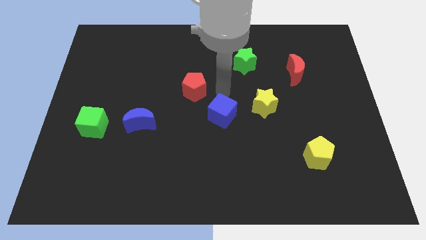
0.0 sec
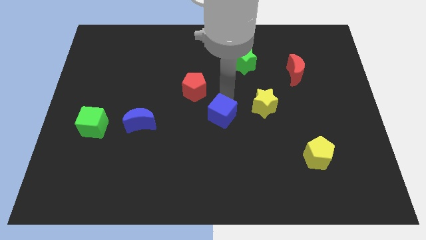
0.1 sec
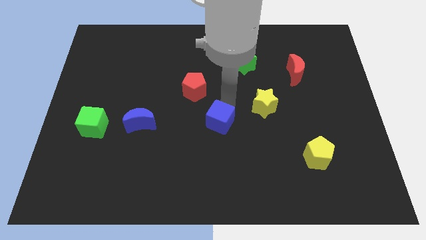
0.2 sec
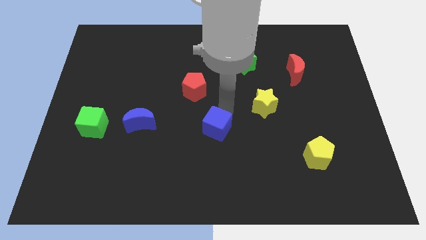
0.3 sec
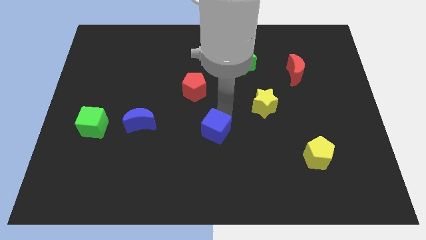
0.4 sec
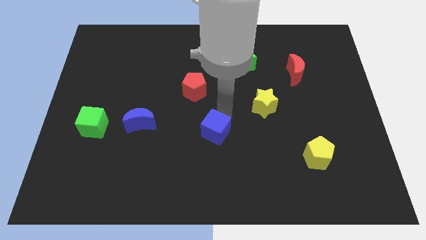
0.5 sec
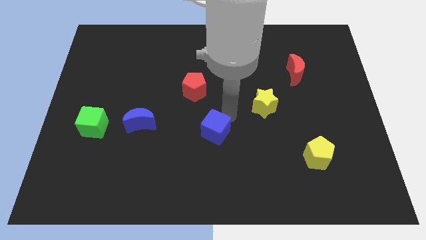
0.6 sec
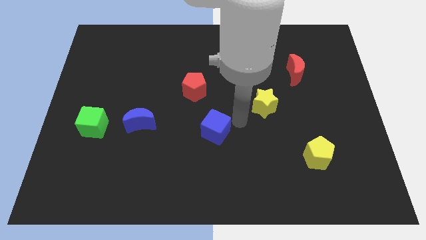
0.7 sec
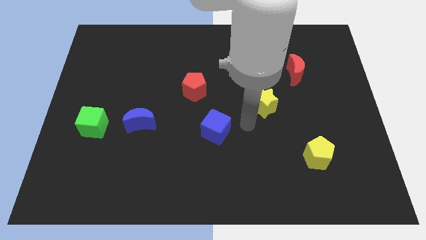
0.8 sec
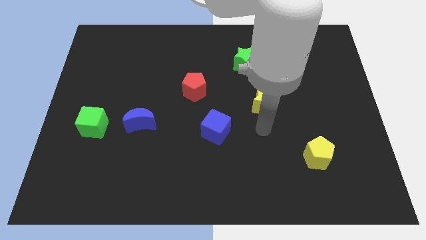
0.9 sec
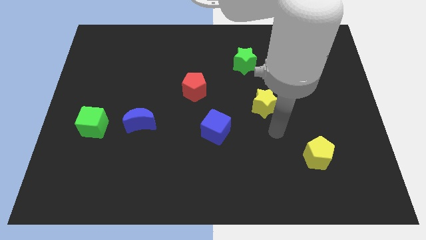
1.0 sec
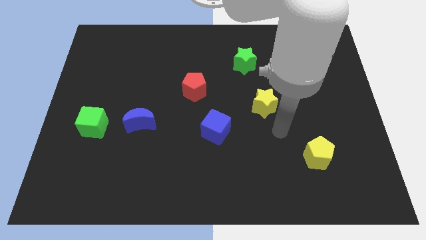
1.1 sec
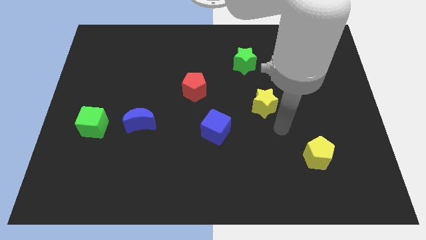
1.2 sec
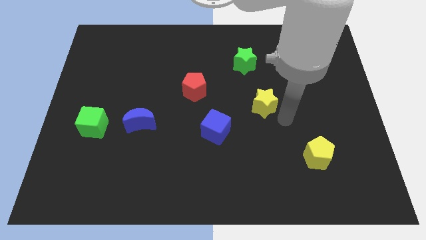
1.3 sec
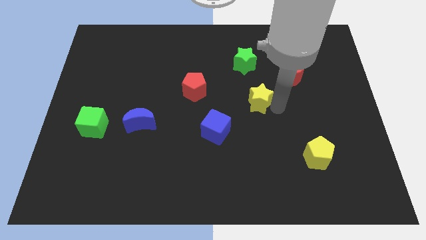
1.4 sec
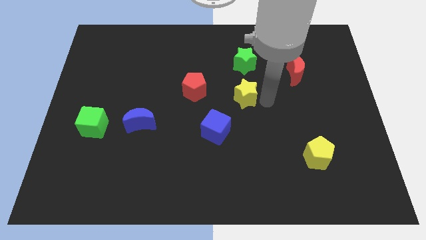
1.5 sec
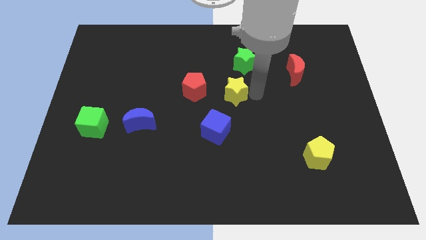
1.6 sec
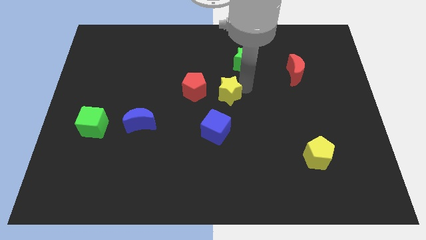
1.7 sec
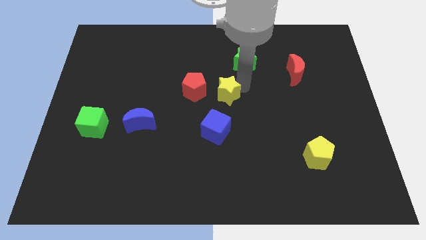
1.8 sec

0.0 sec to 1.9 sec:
push yellow star towards red pentagon

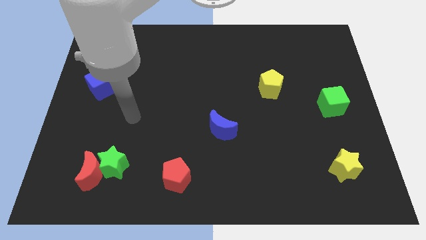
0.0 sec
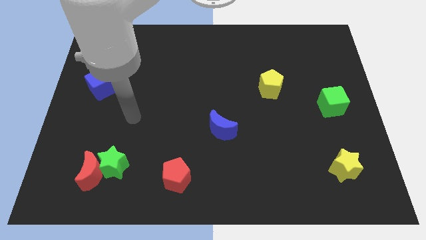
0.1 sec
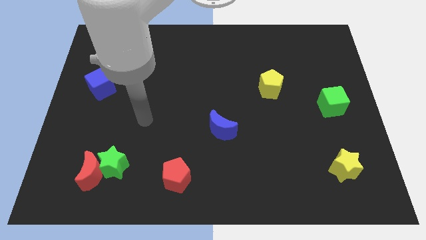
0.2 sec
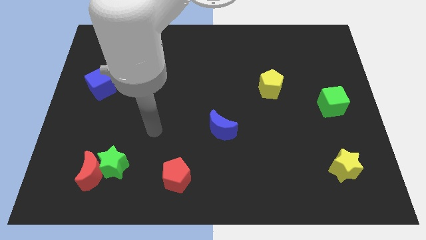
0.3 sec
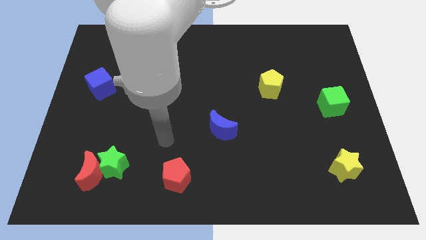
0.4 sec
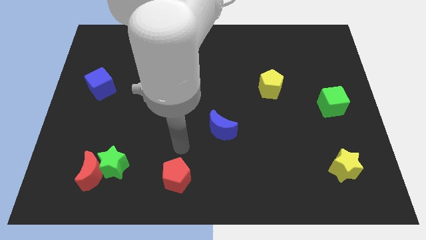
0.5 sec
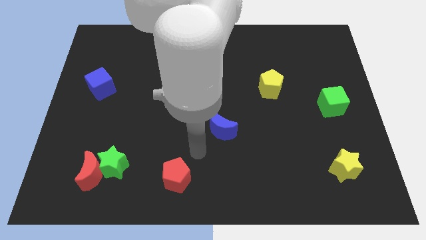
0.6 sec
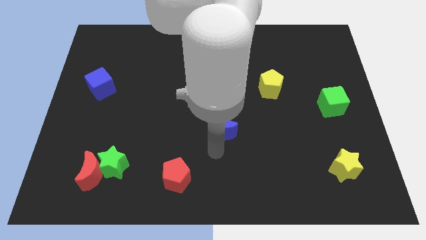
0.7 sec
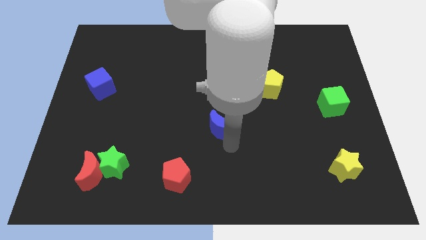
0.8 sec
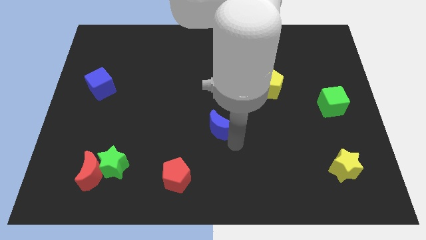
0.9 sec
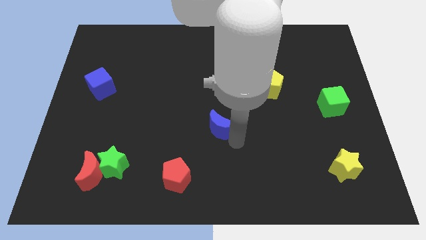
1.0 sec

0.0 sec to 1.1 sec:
place your arm towards the blue moon

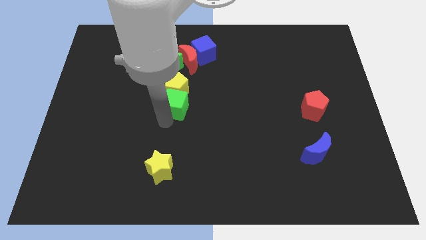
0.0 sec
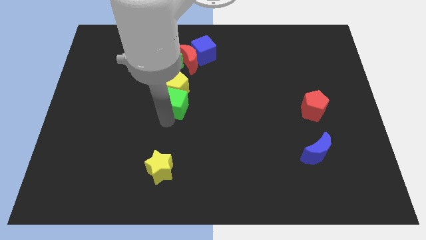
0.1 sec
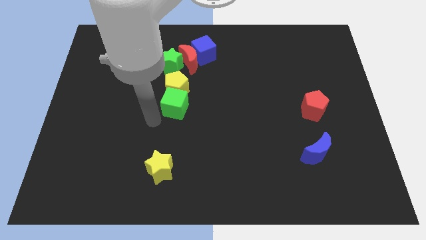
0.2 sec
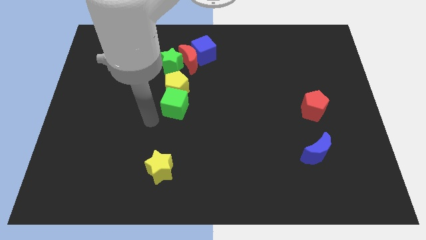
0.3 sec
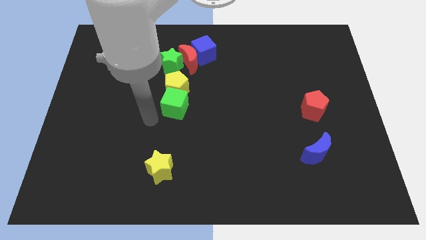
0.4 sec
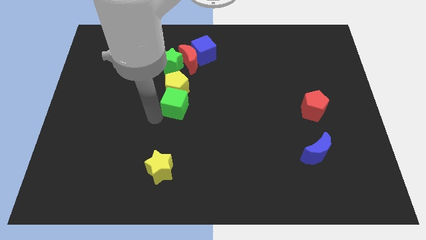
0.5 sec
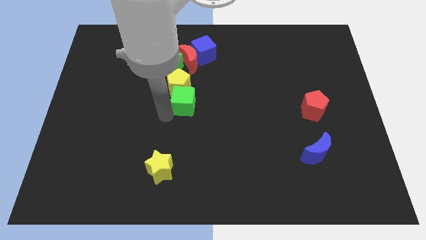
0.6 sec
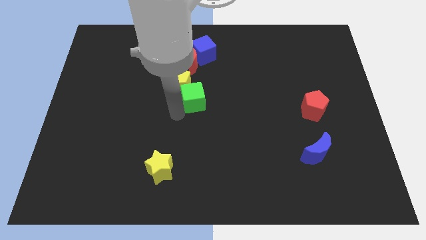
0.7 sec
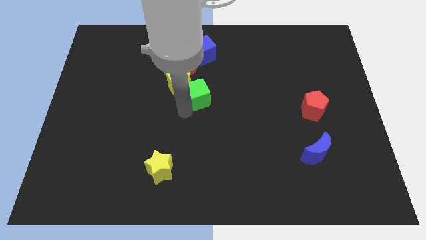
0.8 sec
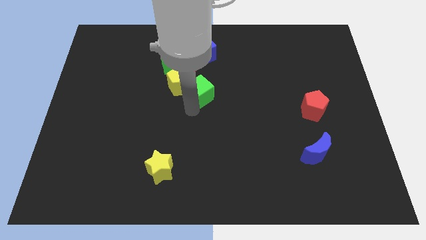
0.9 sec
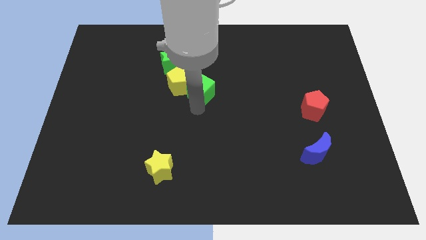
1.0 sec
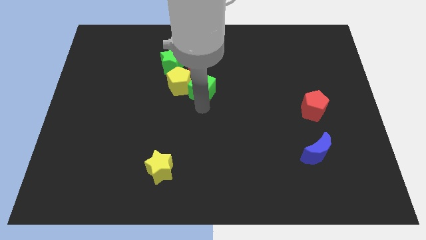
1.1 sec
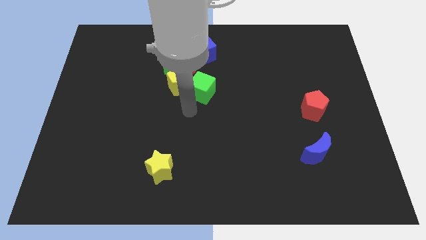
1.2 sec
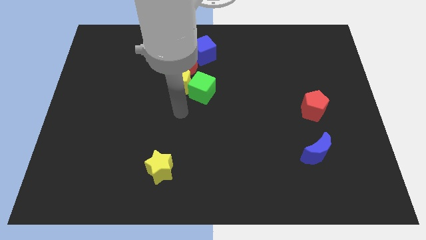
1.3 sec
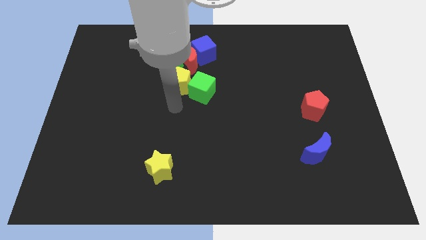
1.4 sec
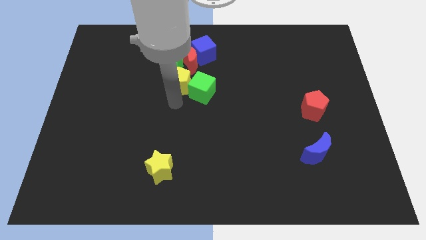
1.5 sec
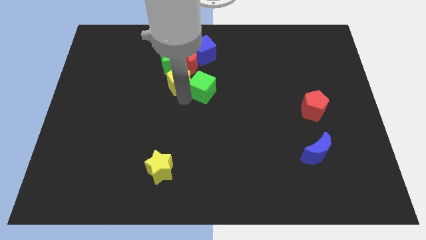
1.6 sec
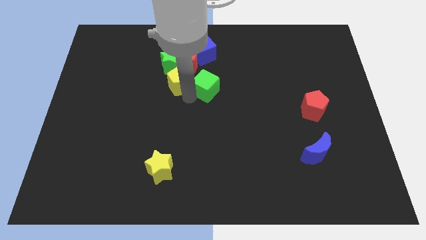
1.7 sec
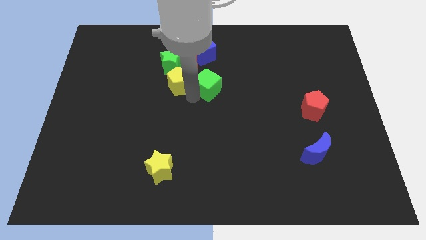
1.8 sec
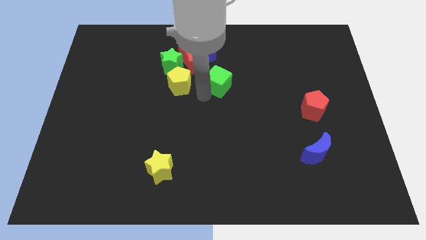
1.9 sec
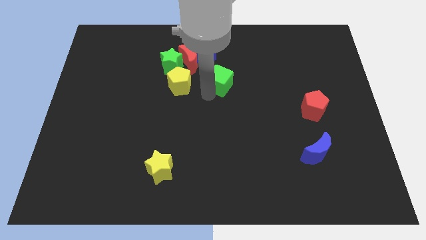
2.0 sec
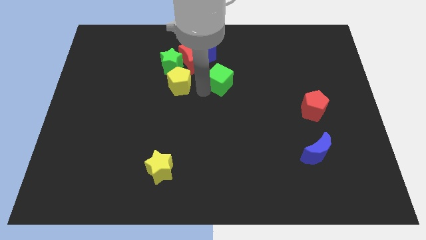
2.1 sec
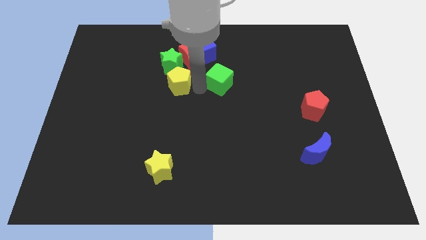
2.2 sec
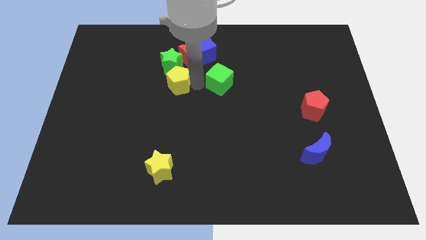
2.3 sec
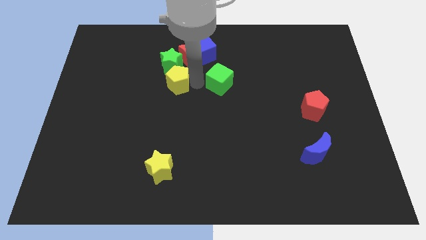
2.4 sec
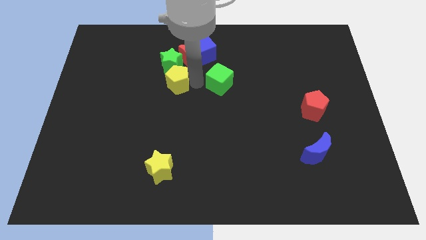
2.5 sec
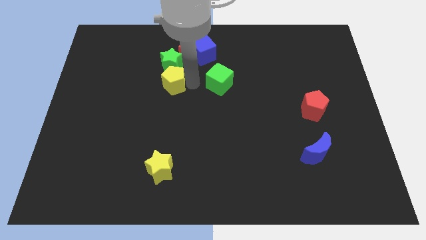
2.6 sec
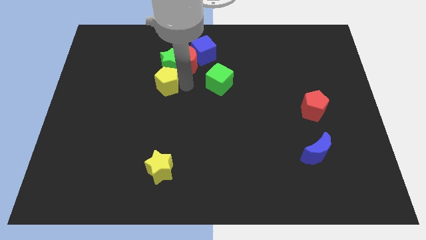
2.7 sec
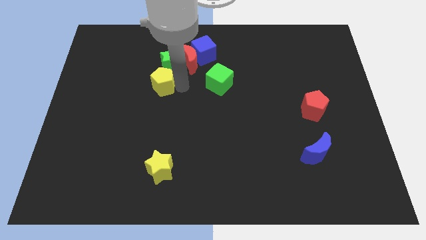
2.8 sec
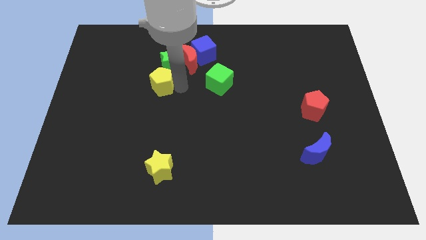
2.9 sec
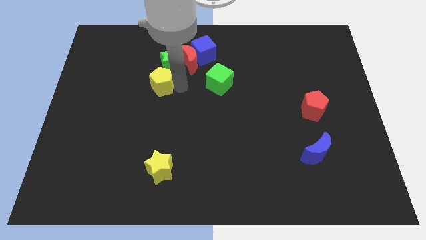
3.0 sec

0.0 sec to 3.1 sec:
move the yellow pentagon near the green star

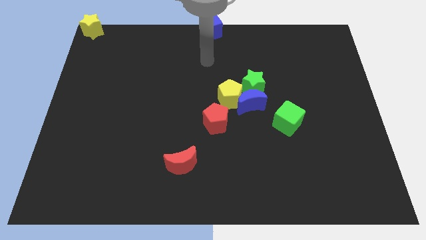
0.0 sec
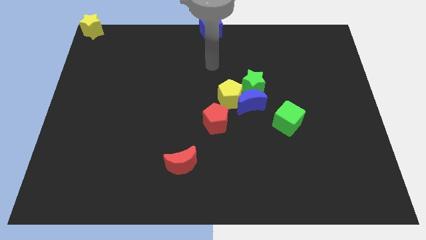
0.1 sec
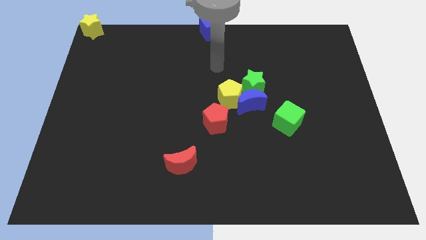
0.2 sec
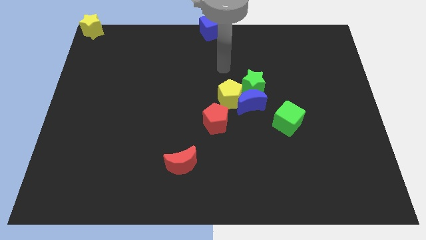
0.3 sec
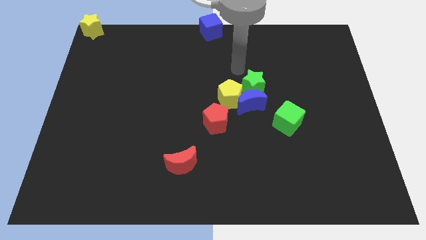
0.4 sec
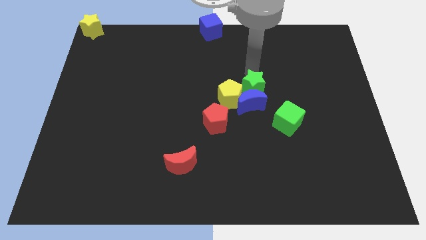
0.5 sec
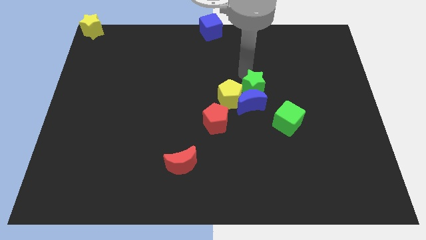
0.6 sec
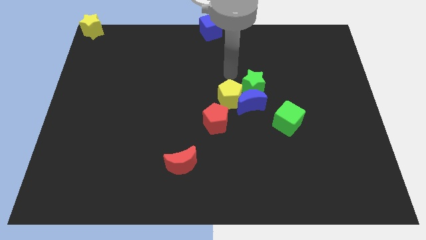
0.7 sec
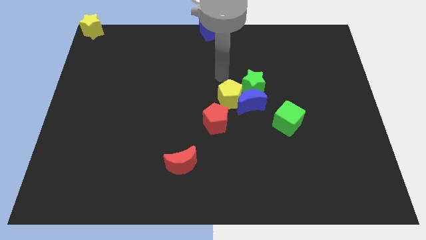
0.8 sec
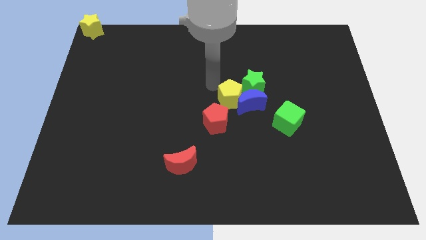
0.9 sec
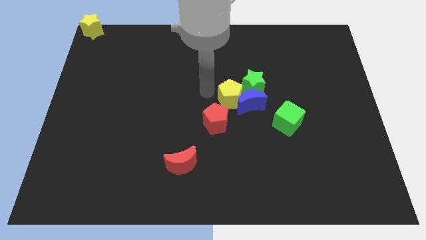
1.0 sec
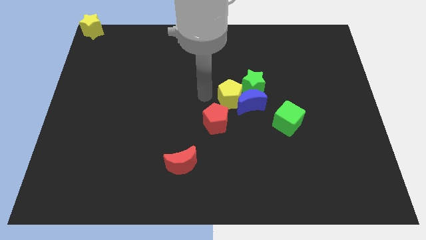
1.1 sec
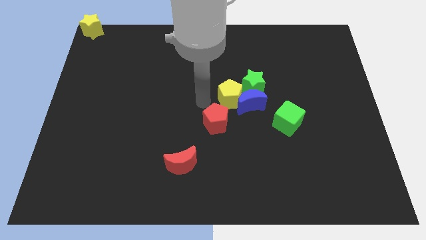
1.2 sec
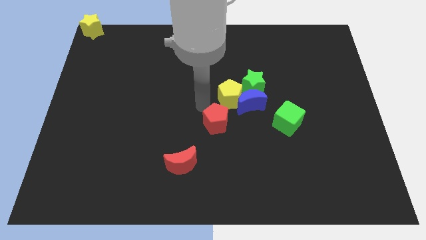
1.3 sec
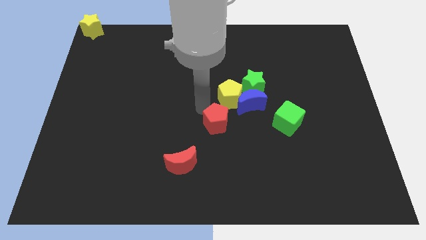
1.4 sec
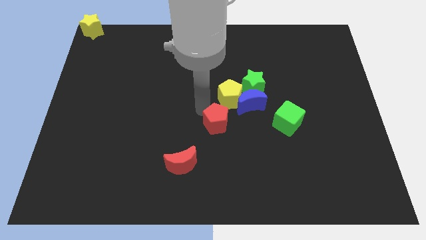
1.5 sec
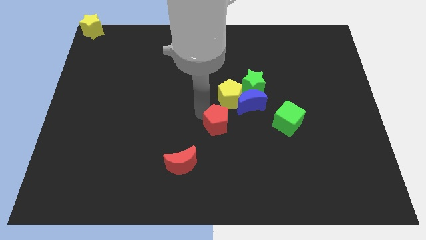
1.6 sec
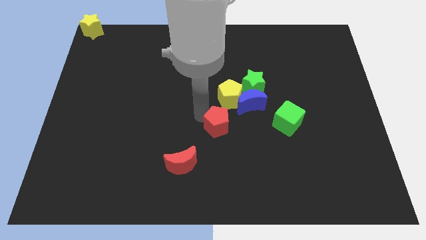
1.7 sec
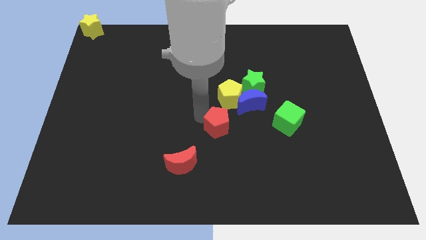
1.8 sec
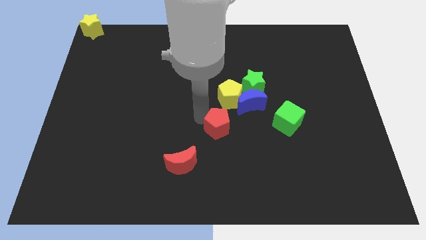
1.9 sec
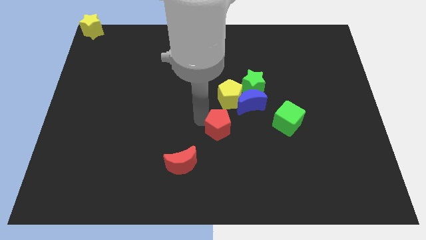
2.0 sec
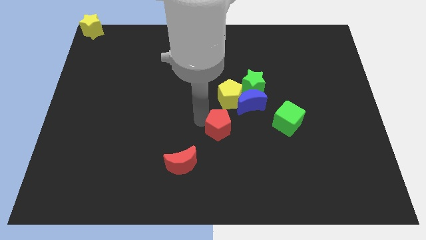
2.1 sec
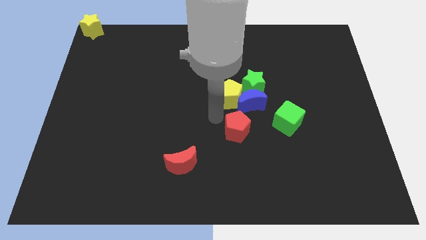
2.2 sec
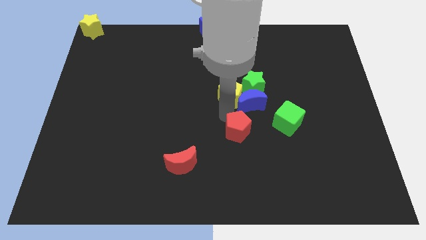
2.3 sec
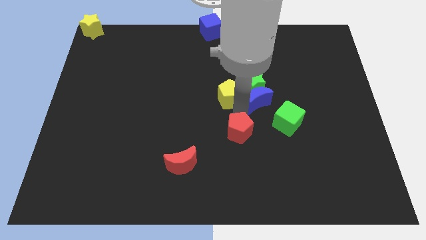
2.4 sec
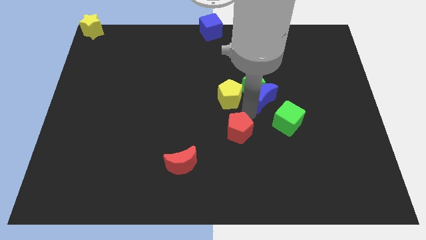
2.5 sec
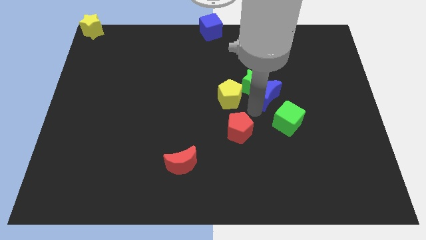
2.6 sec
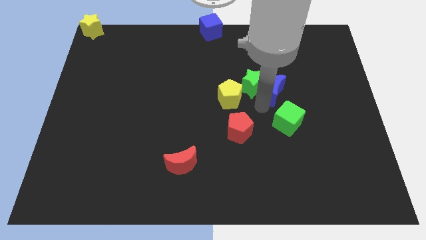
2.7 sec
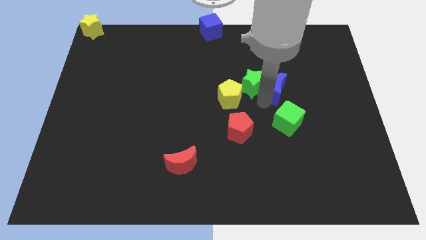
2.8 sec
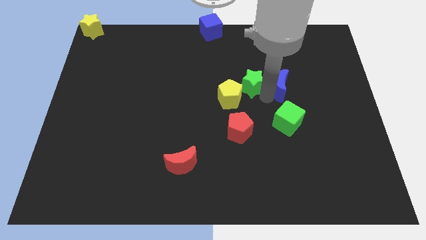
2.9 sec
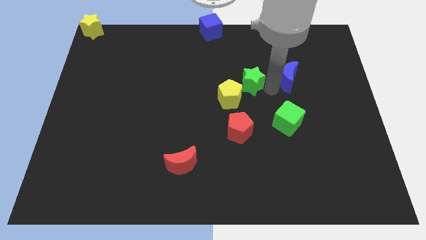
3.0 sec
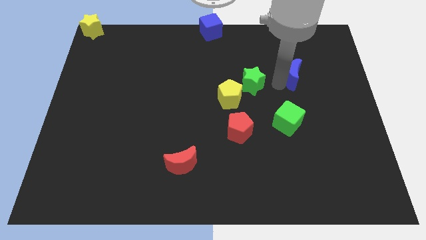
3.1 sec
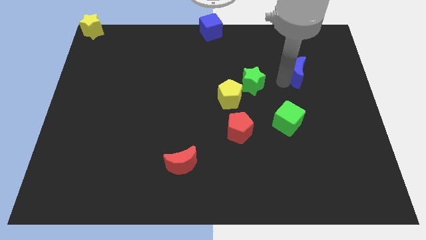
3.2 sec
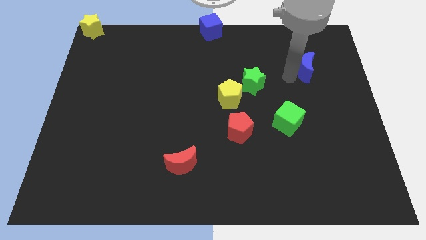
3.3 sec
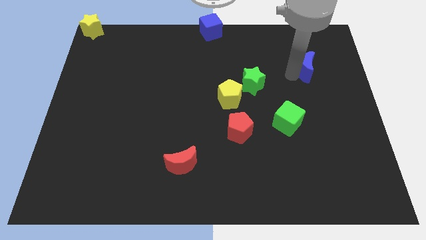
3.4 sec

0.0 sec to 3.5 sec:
separate the blue crescent from the green star
